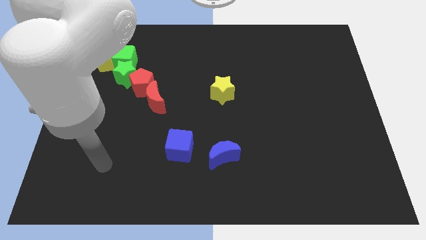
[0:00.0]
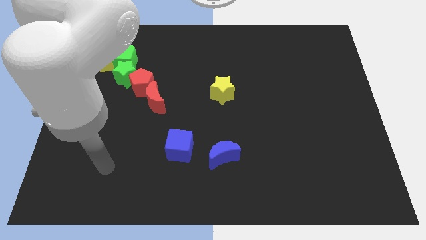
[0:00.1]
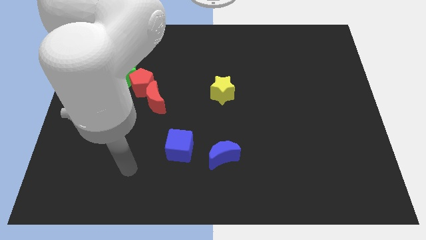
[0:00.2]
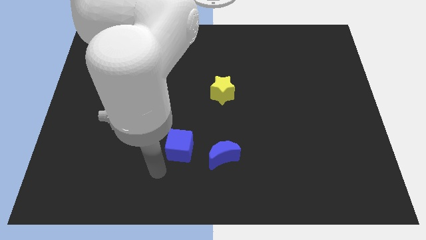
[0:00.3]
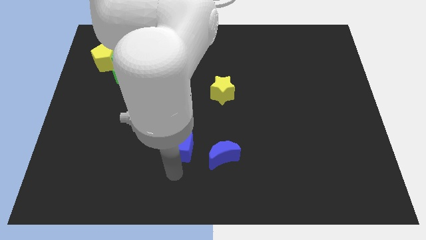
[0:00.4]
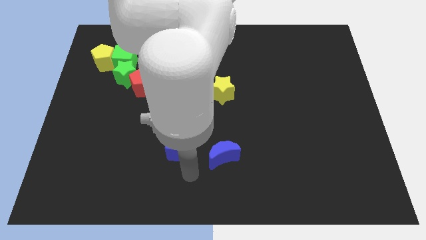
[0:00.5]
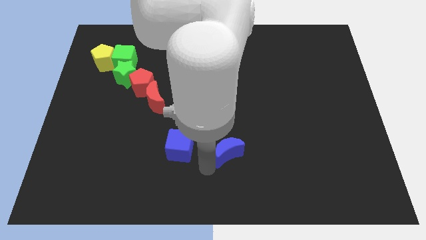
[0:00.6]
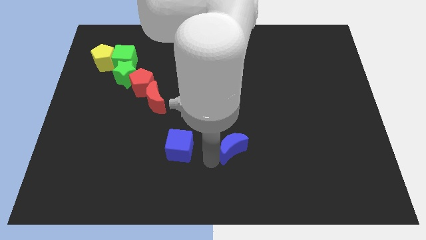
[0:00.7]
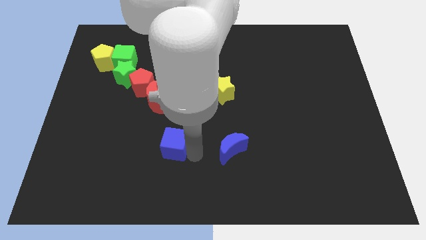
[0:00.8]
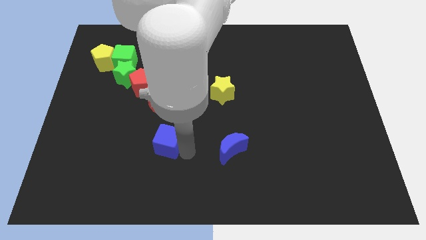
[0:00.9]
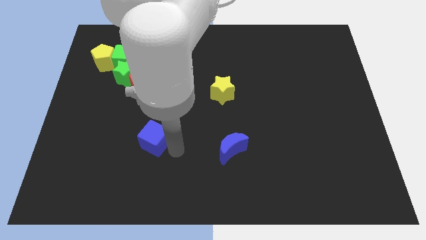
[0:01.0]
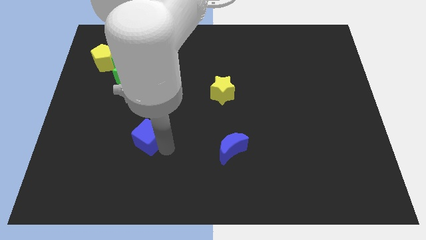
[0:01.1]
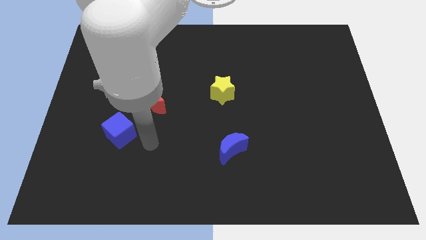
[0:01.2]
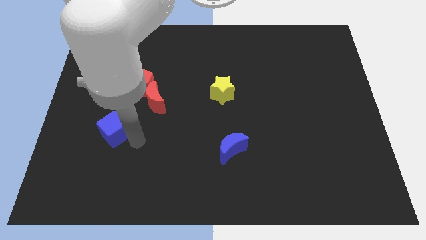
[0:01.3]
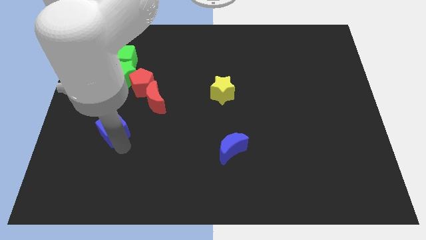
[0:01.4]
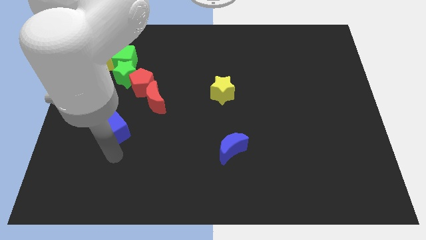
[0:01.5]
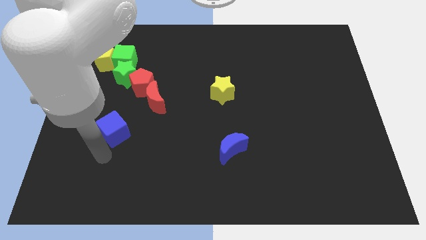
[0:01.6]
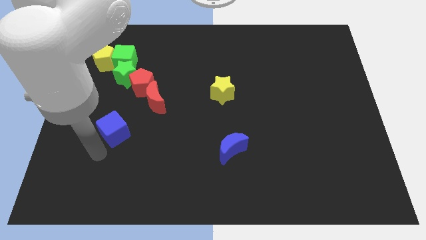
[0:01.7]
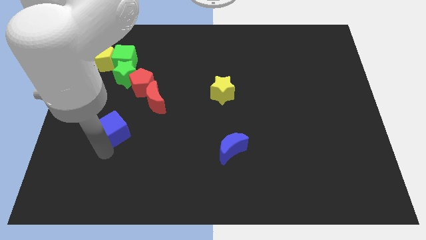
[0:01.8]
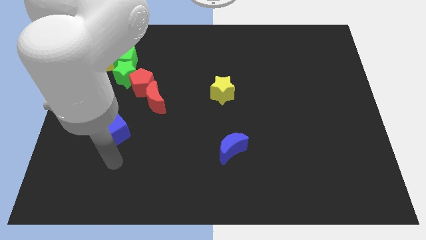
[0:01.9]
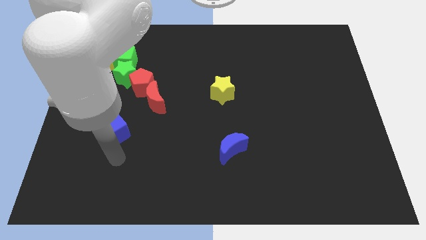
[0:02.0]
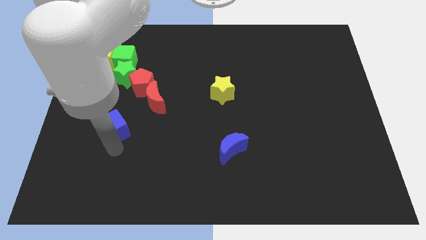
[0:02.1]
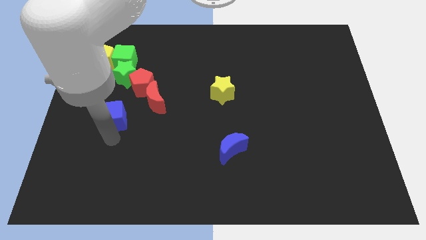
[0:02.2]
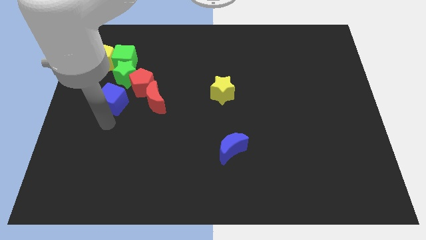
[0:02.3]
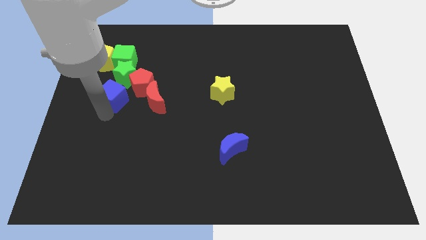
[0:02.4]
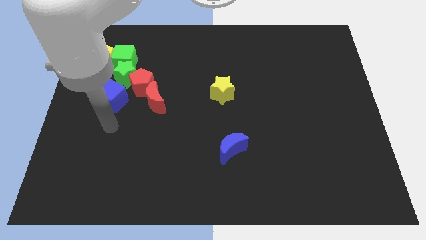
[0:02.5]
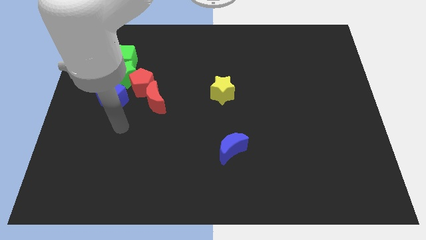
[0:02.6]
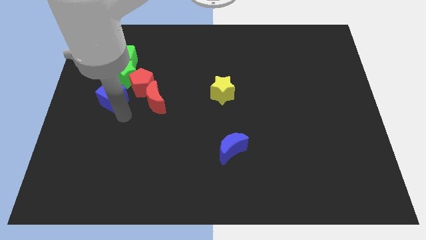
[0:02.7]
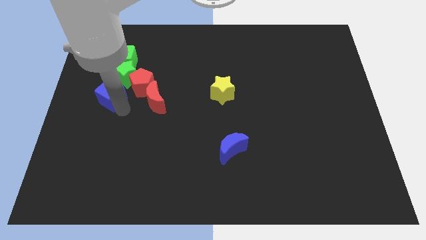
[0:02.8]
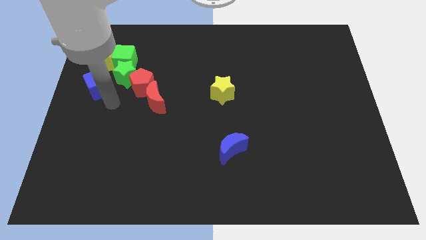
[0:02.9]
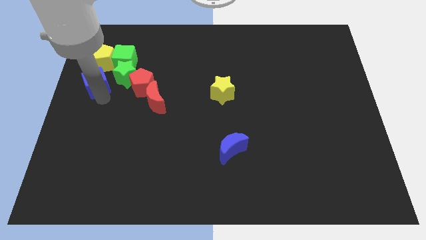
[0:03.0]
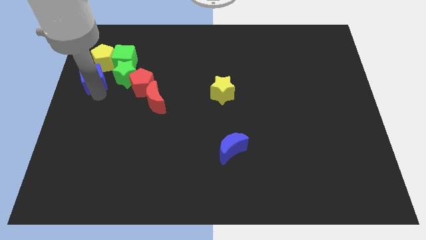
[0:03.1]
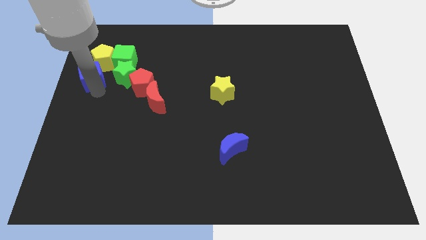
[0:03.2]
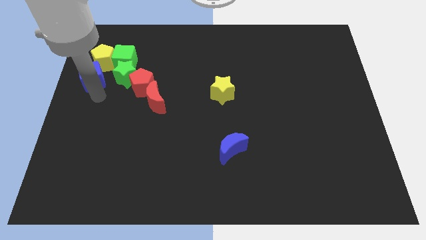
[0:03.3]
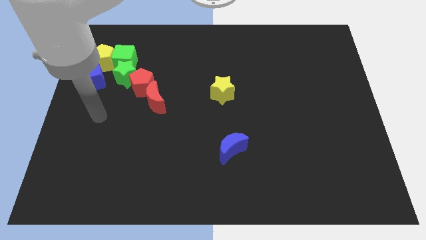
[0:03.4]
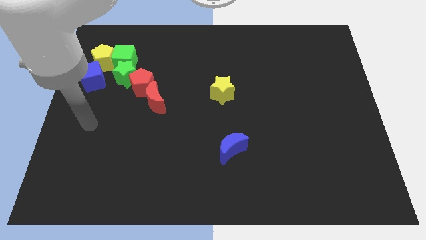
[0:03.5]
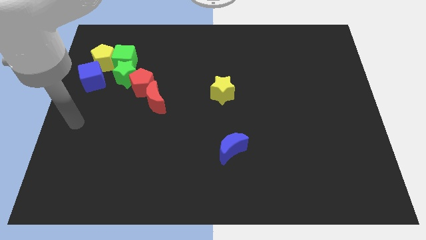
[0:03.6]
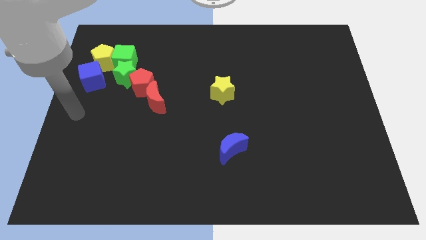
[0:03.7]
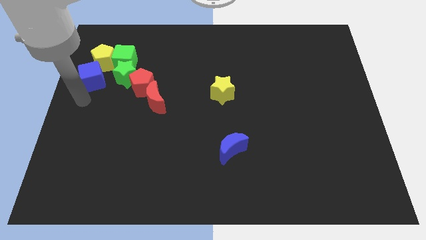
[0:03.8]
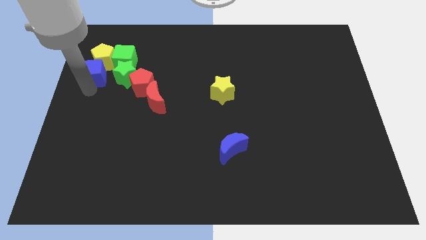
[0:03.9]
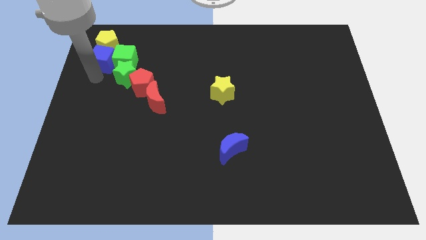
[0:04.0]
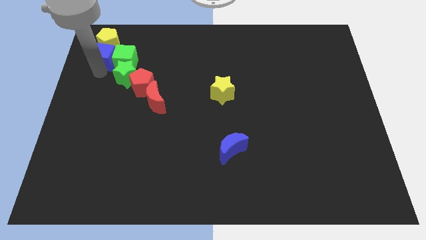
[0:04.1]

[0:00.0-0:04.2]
move the blue cube to the yellow pentagon

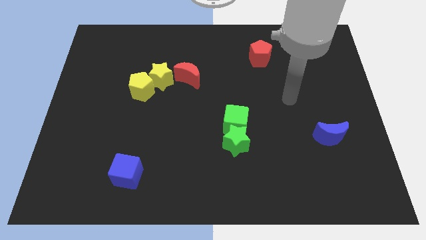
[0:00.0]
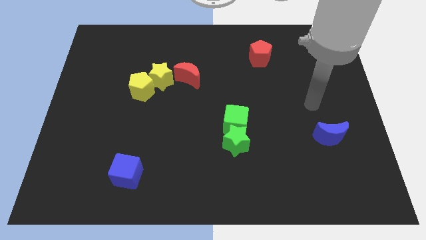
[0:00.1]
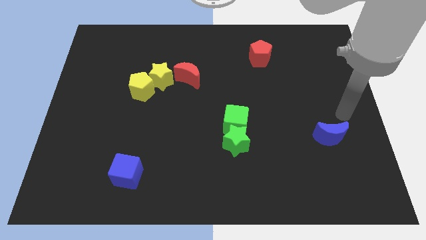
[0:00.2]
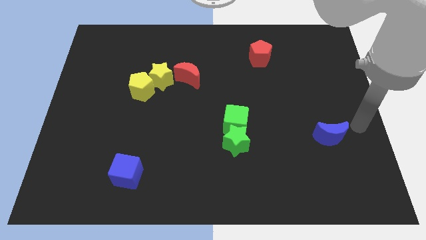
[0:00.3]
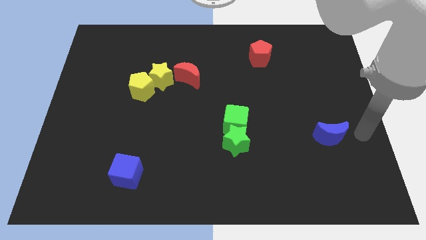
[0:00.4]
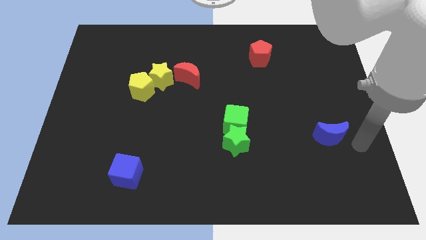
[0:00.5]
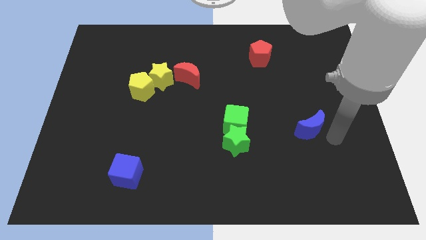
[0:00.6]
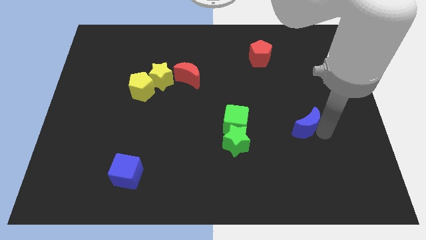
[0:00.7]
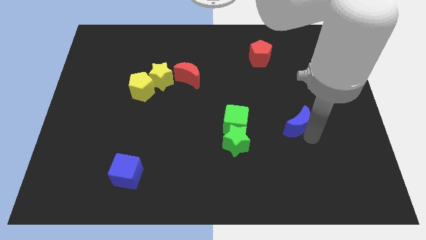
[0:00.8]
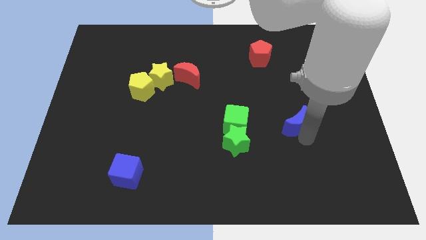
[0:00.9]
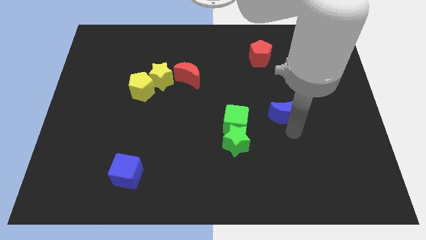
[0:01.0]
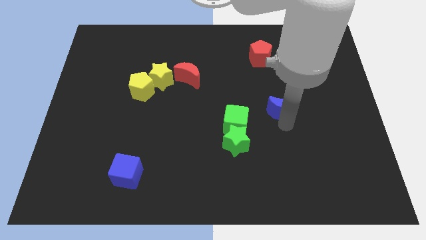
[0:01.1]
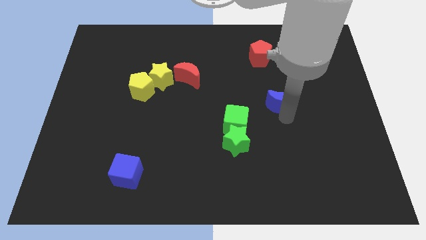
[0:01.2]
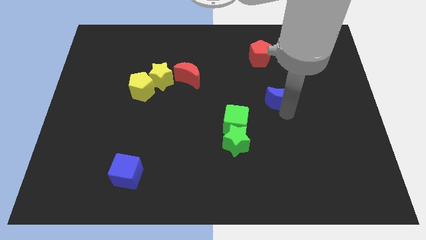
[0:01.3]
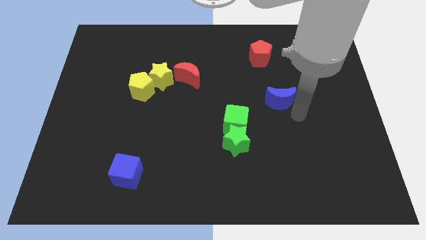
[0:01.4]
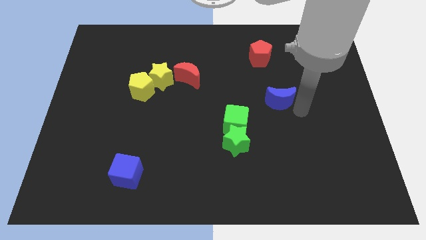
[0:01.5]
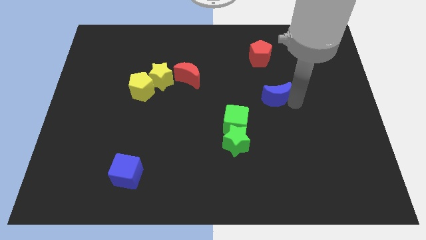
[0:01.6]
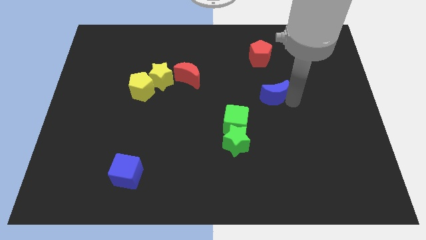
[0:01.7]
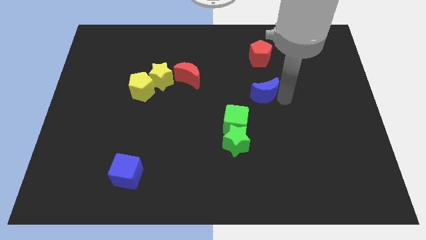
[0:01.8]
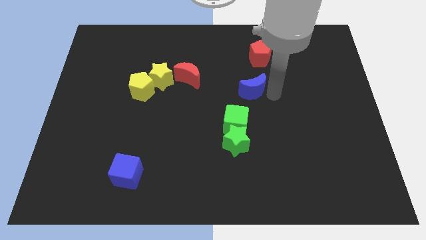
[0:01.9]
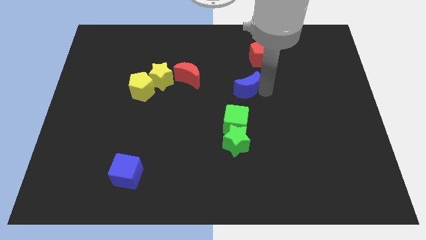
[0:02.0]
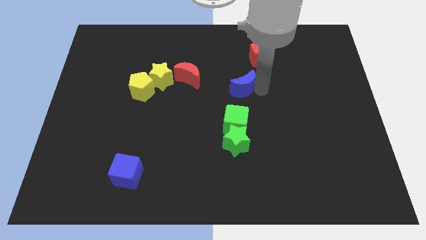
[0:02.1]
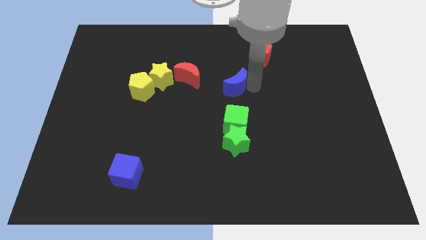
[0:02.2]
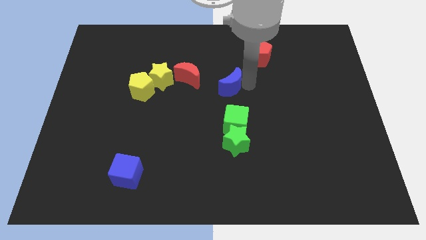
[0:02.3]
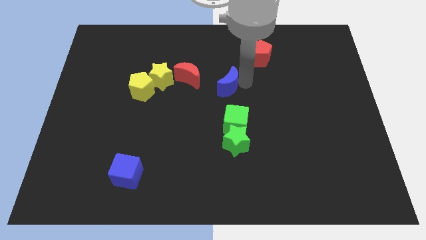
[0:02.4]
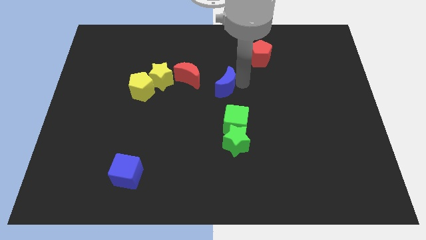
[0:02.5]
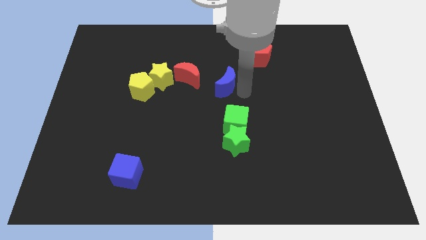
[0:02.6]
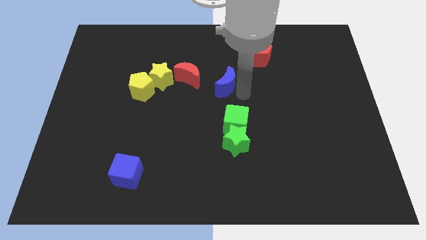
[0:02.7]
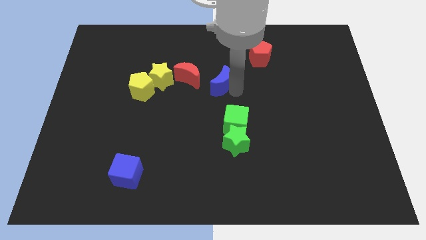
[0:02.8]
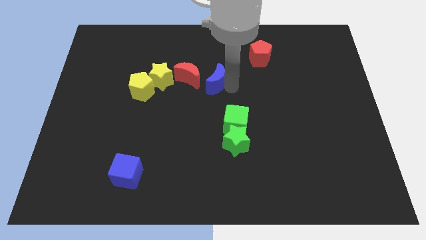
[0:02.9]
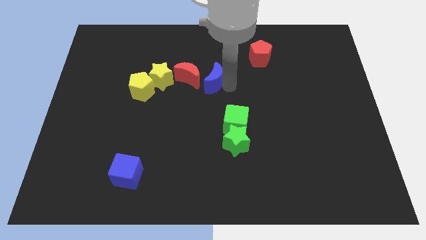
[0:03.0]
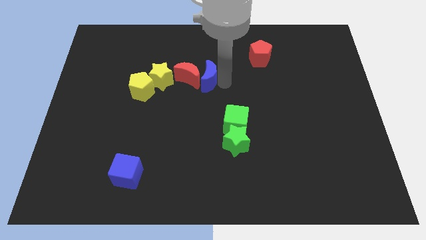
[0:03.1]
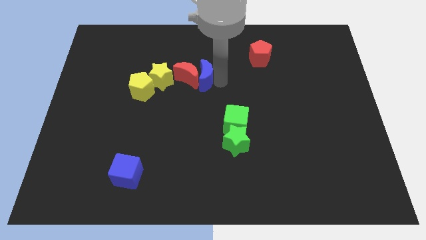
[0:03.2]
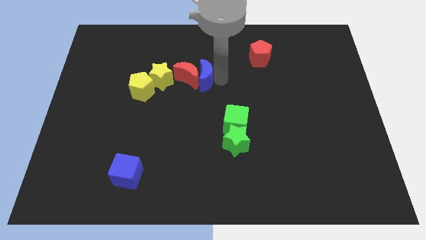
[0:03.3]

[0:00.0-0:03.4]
slide the blue moon towards the red moon

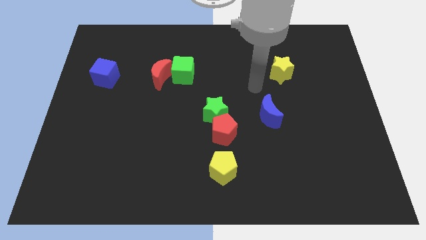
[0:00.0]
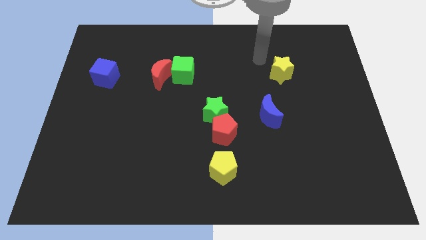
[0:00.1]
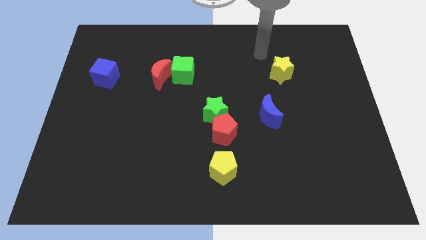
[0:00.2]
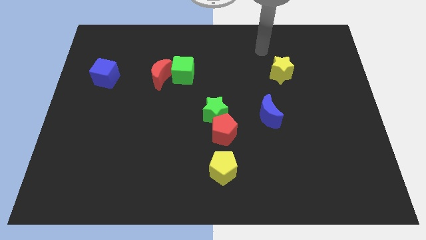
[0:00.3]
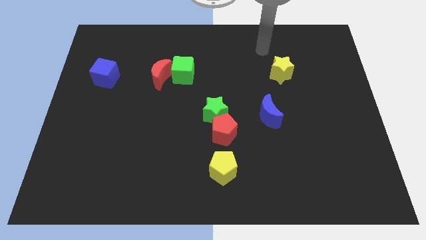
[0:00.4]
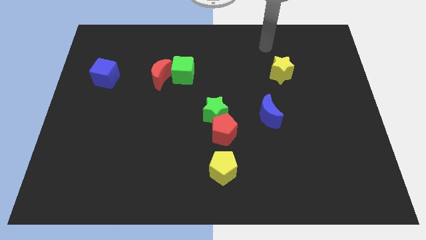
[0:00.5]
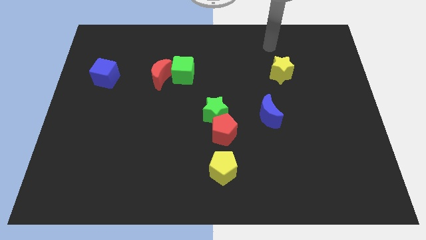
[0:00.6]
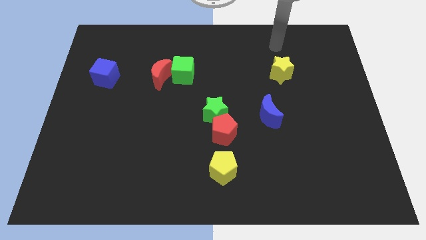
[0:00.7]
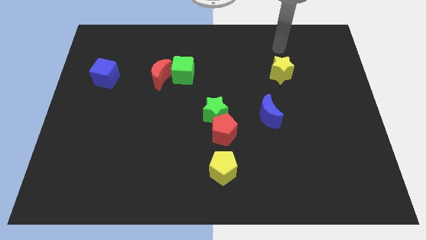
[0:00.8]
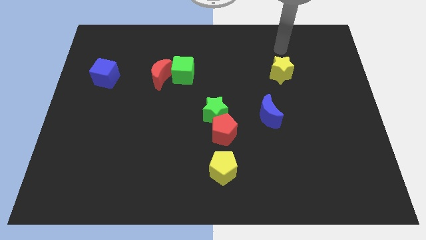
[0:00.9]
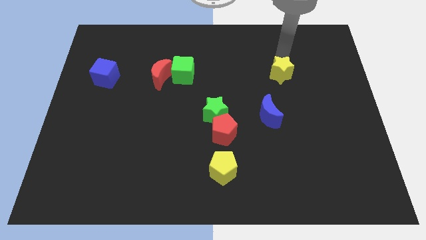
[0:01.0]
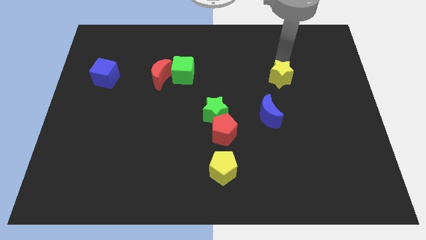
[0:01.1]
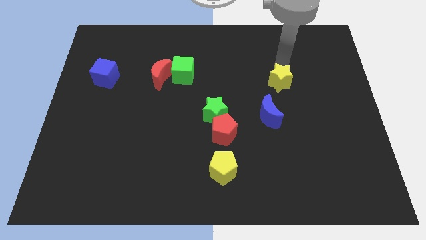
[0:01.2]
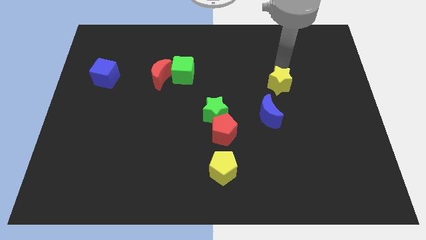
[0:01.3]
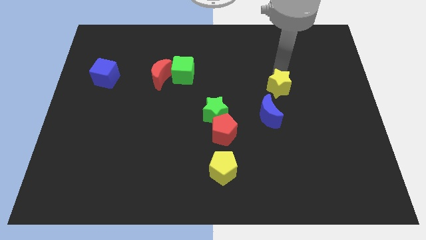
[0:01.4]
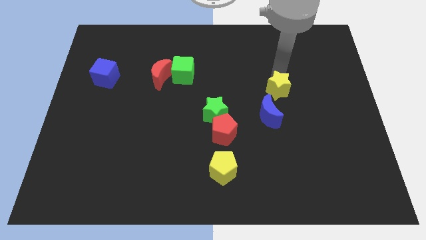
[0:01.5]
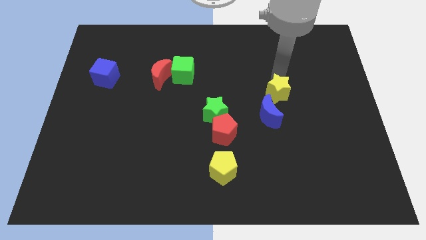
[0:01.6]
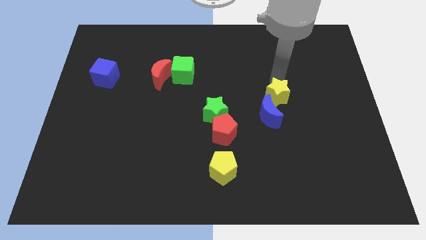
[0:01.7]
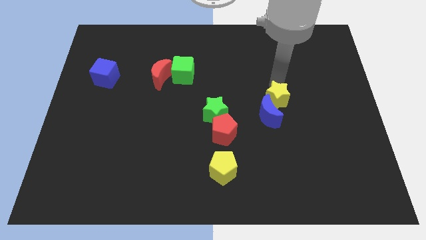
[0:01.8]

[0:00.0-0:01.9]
push the yellow star to the blue moon
